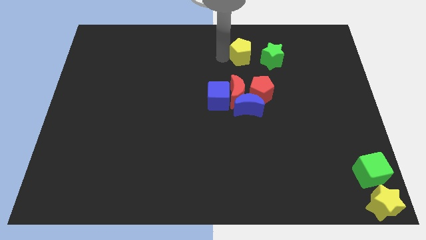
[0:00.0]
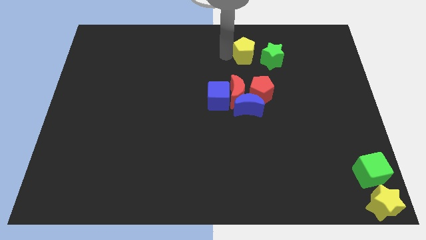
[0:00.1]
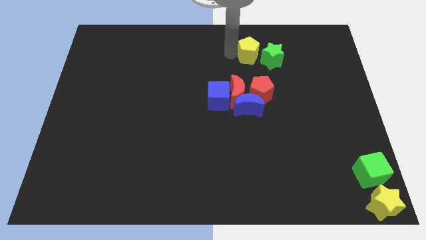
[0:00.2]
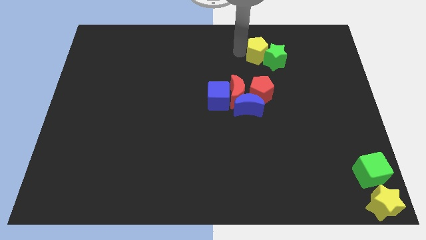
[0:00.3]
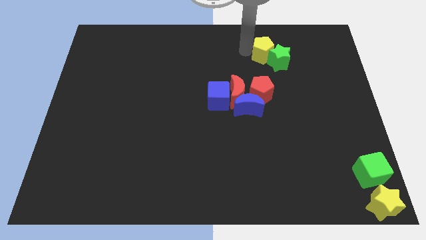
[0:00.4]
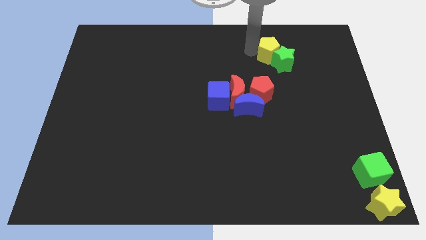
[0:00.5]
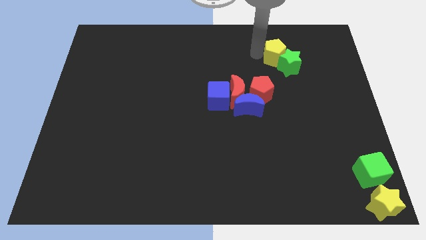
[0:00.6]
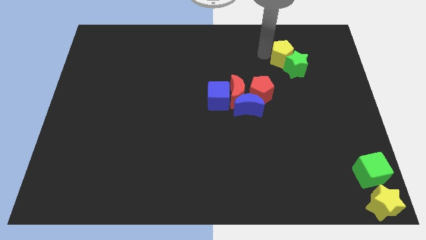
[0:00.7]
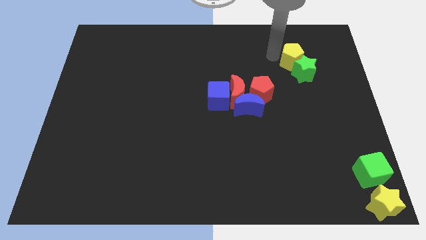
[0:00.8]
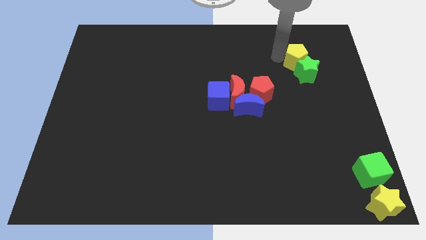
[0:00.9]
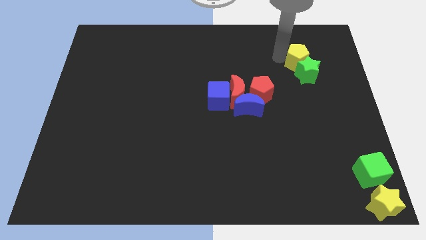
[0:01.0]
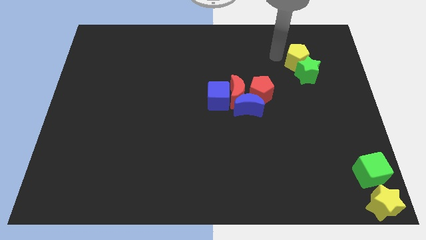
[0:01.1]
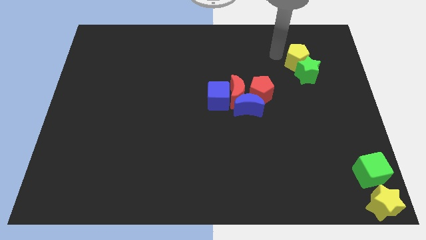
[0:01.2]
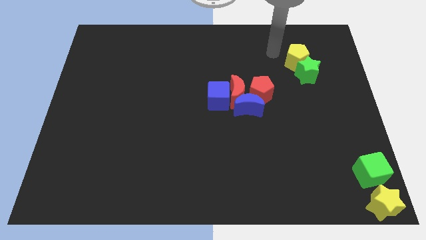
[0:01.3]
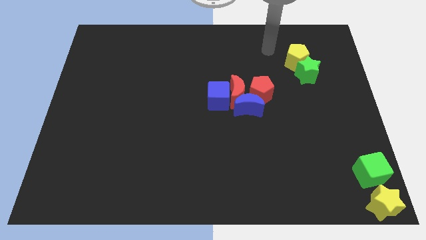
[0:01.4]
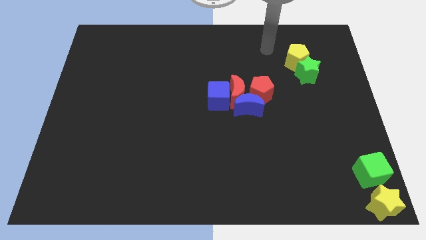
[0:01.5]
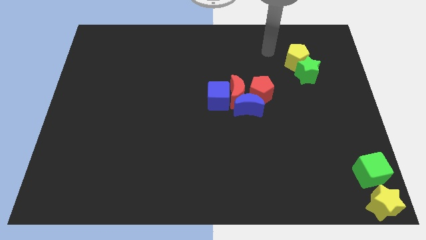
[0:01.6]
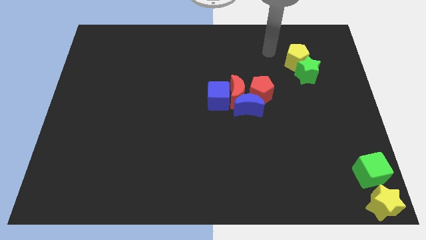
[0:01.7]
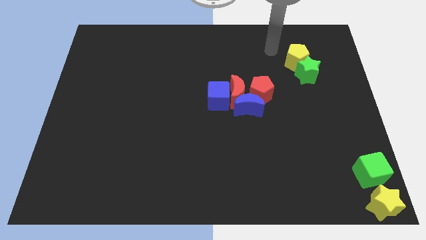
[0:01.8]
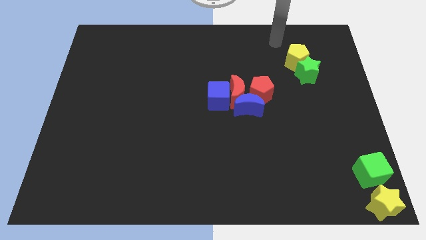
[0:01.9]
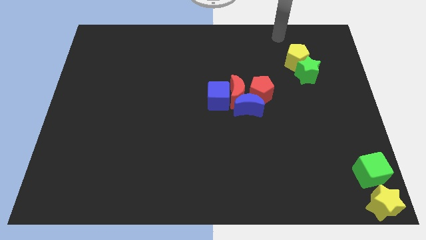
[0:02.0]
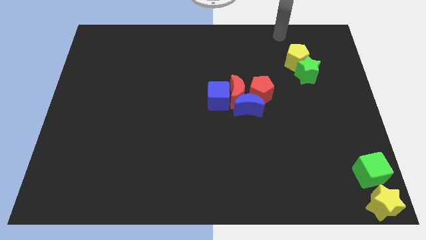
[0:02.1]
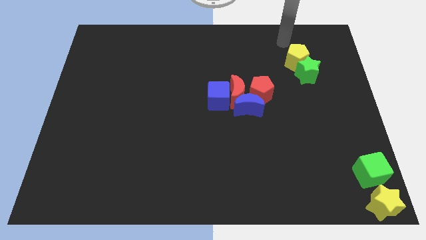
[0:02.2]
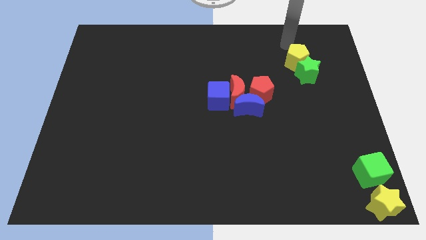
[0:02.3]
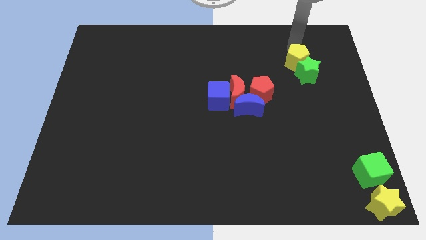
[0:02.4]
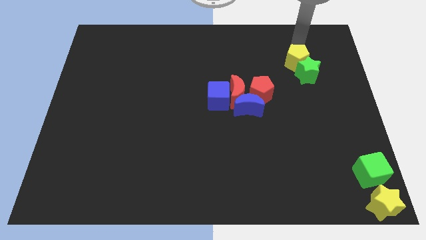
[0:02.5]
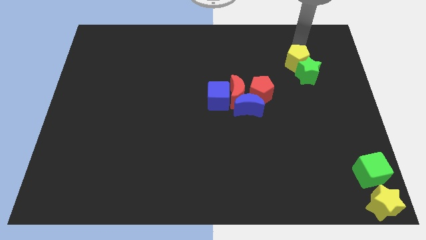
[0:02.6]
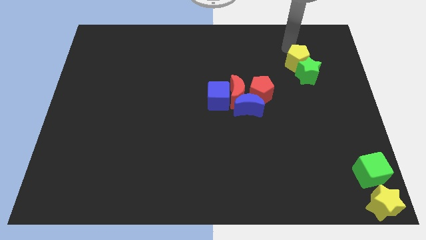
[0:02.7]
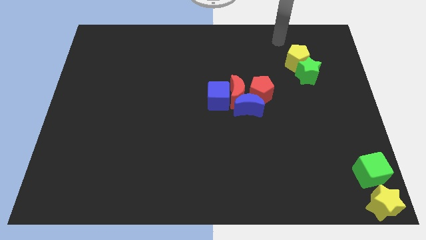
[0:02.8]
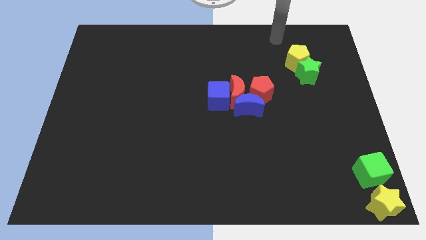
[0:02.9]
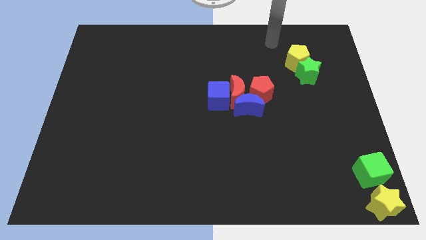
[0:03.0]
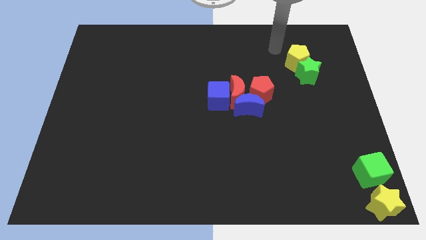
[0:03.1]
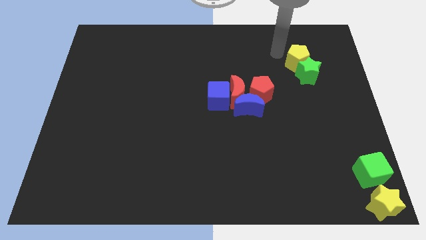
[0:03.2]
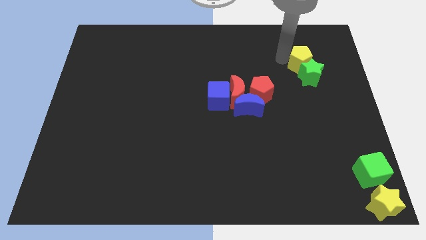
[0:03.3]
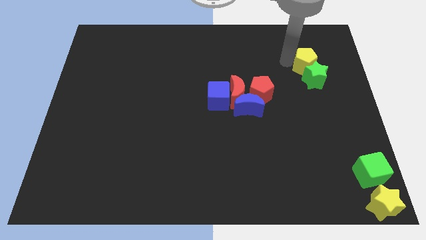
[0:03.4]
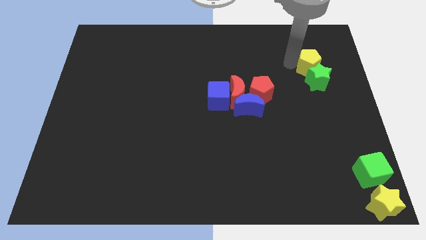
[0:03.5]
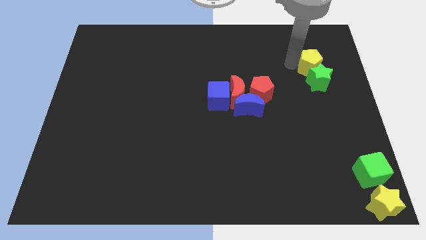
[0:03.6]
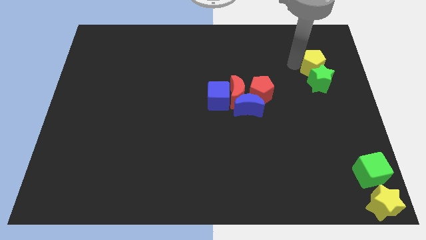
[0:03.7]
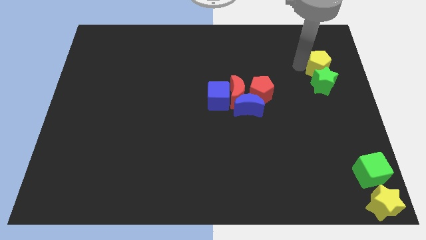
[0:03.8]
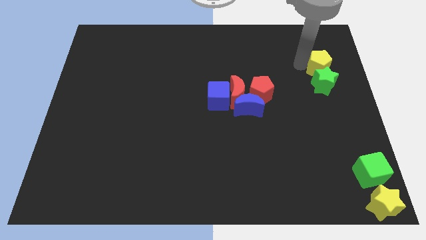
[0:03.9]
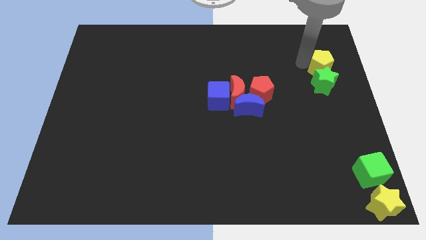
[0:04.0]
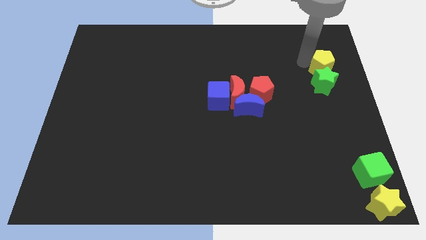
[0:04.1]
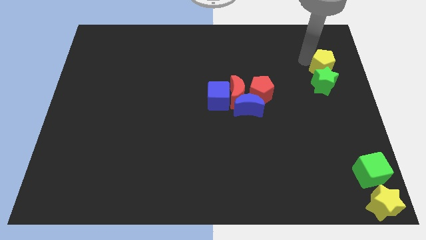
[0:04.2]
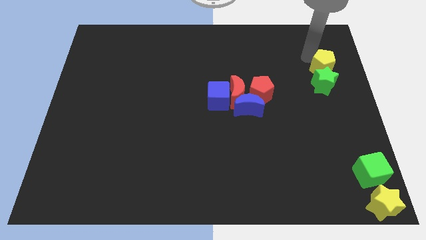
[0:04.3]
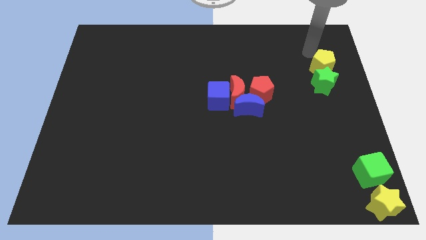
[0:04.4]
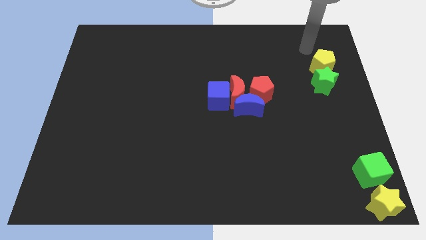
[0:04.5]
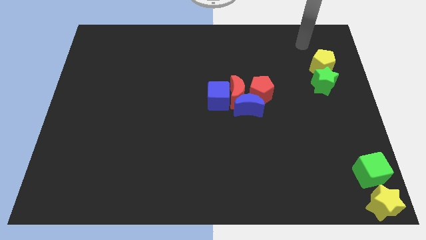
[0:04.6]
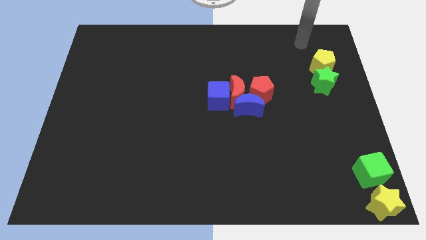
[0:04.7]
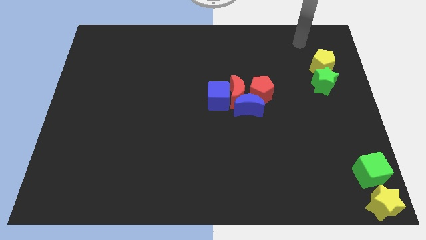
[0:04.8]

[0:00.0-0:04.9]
push the green star and yellow pentagon to the right

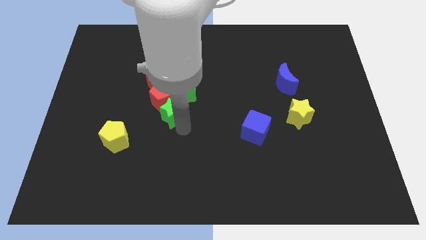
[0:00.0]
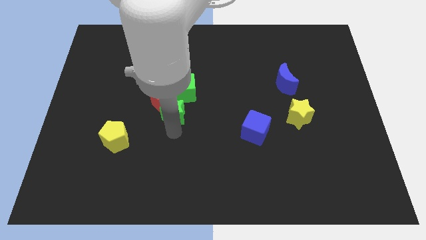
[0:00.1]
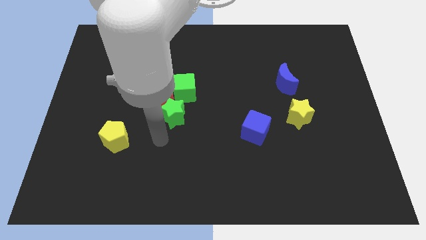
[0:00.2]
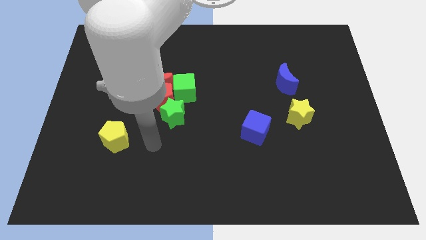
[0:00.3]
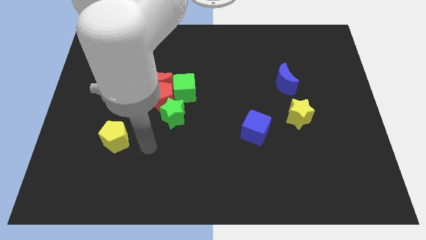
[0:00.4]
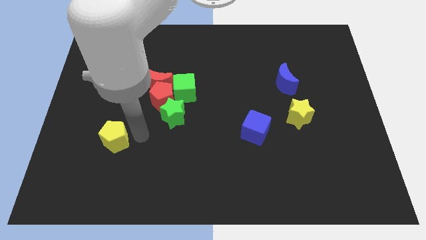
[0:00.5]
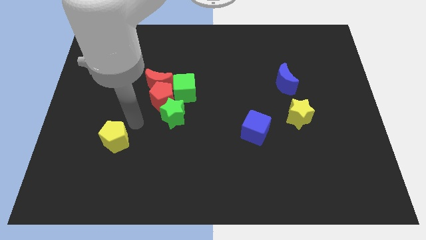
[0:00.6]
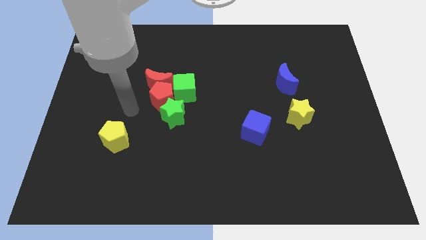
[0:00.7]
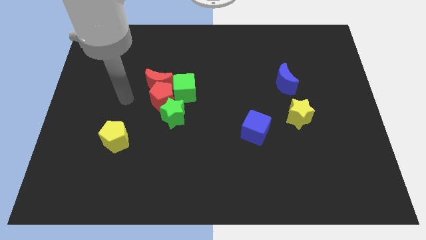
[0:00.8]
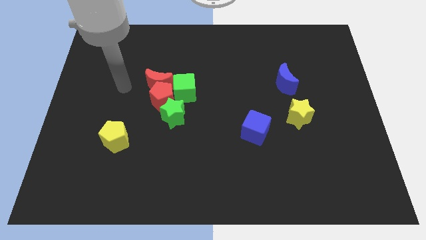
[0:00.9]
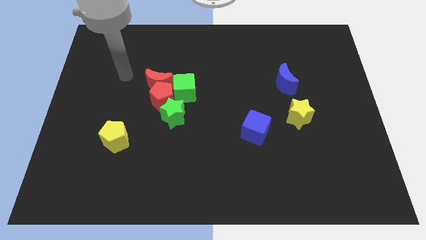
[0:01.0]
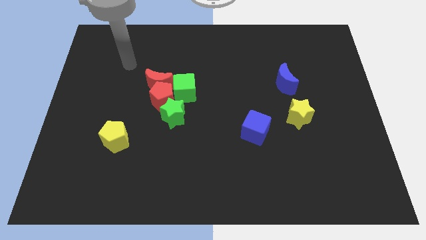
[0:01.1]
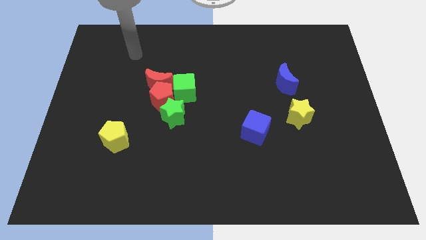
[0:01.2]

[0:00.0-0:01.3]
move your arm towards the top side of the board

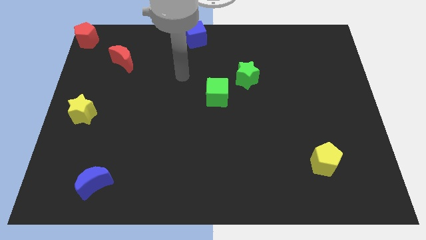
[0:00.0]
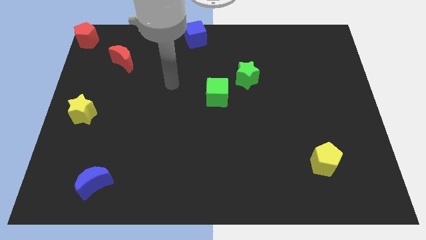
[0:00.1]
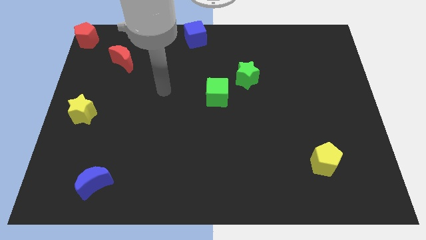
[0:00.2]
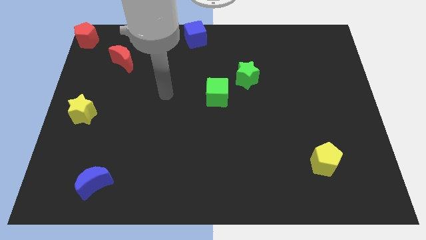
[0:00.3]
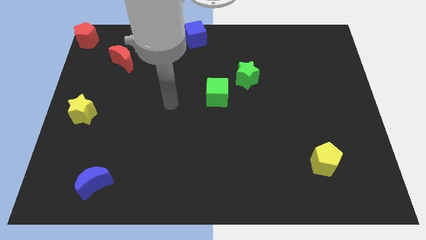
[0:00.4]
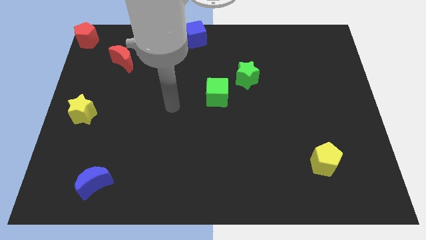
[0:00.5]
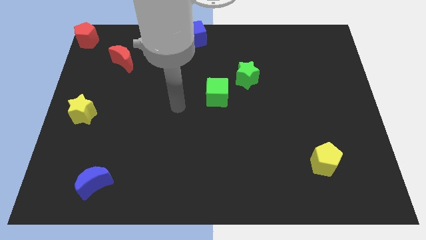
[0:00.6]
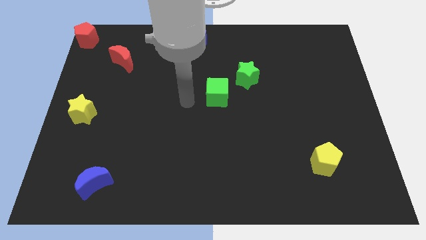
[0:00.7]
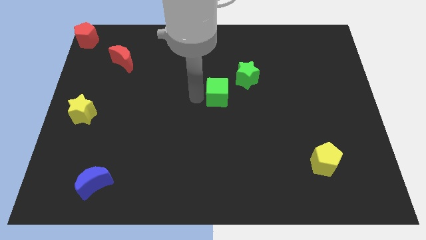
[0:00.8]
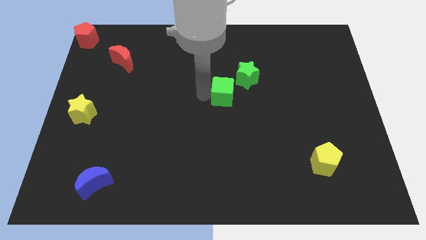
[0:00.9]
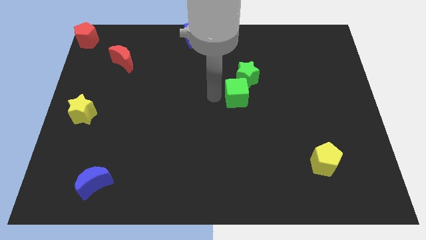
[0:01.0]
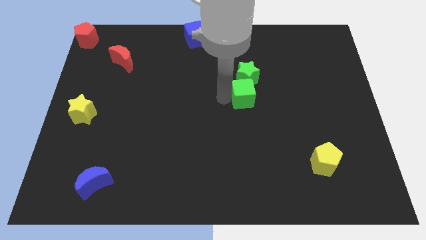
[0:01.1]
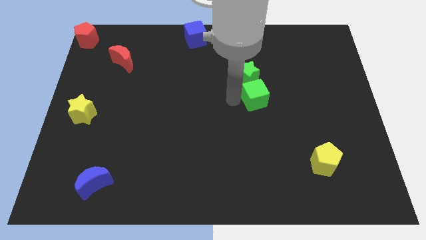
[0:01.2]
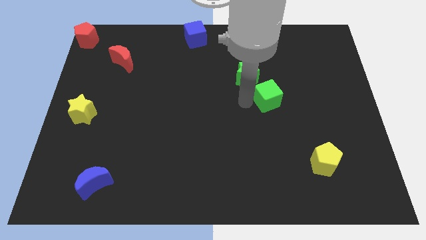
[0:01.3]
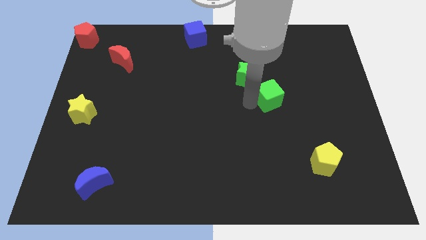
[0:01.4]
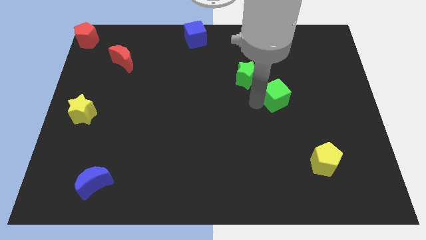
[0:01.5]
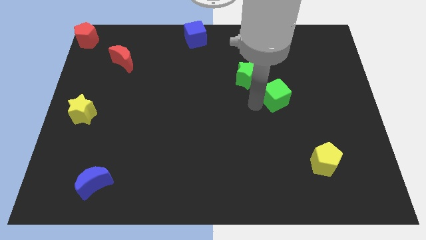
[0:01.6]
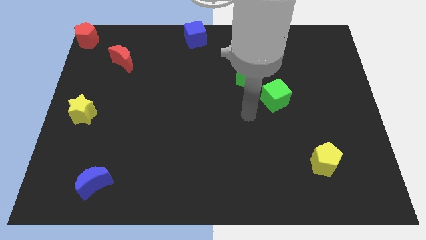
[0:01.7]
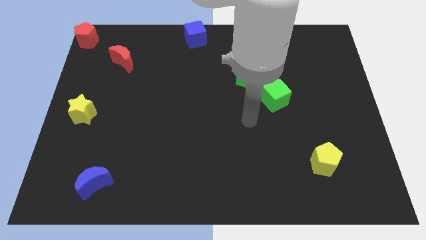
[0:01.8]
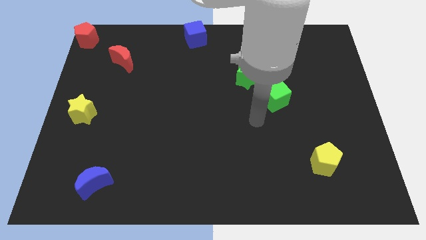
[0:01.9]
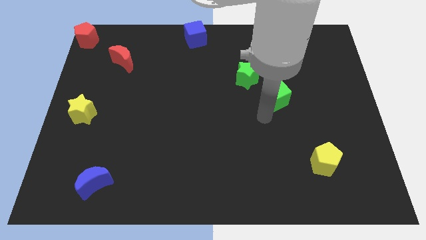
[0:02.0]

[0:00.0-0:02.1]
push the green cube towards the center right of the board

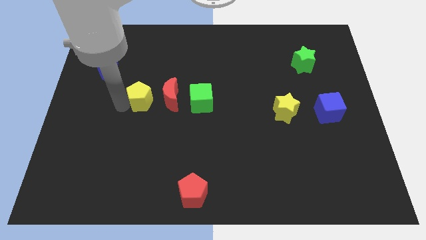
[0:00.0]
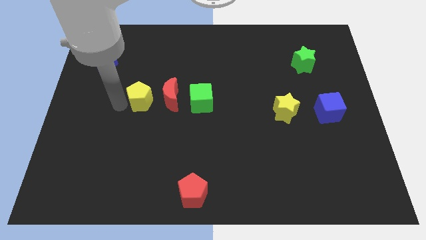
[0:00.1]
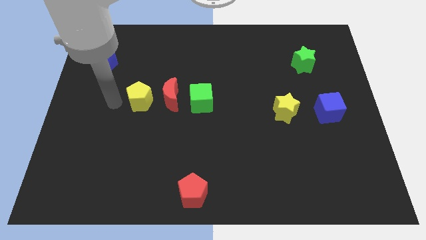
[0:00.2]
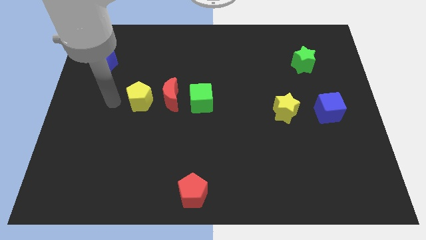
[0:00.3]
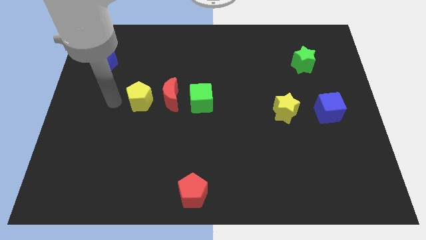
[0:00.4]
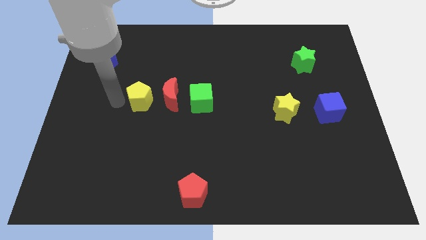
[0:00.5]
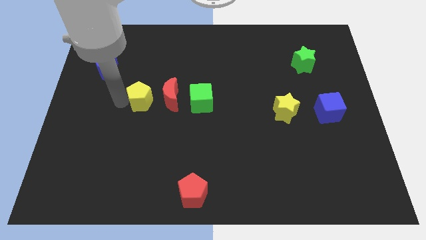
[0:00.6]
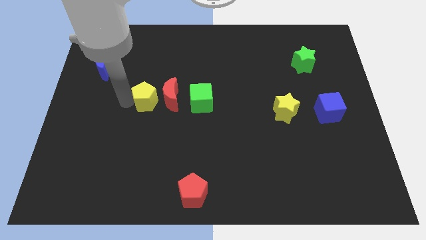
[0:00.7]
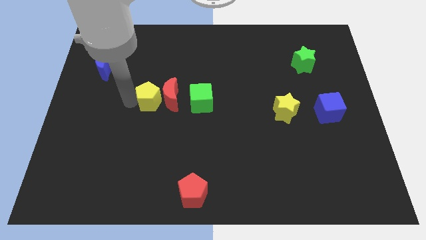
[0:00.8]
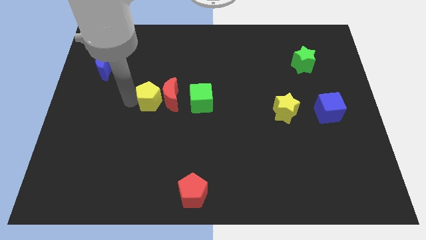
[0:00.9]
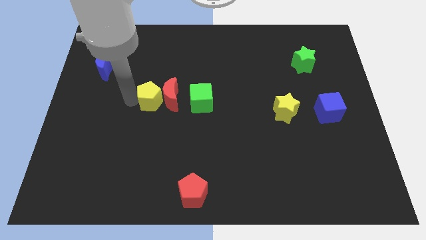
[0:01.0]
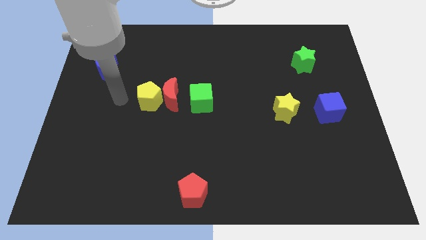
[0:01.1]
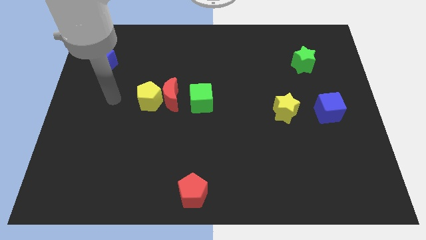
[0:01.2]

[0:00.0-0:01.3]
push the yellow pentagon close to the red crescent
